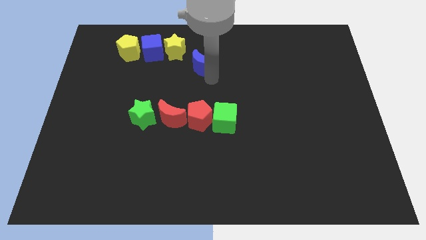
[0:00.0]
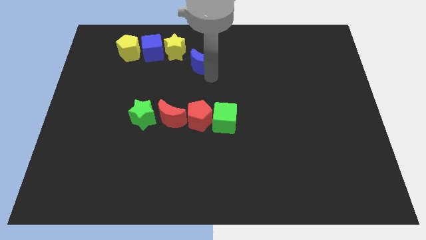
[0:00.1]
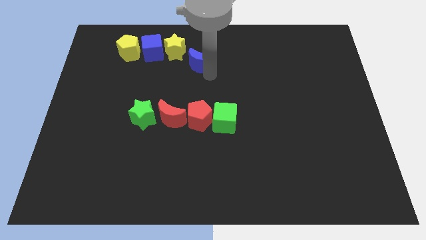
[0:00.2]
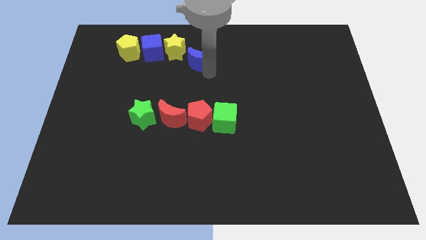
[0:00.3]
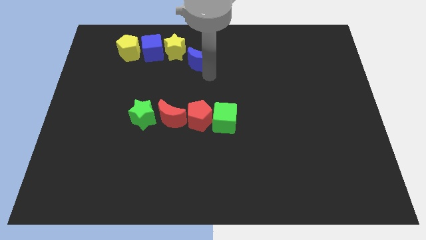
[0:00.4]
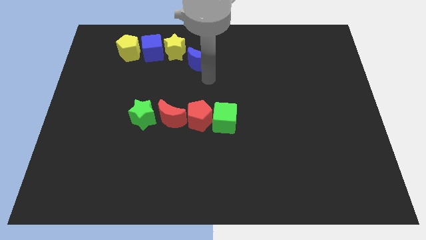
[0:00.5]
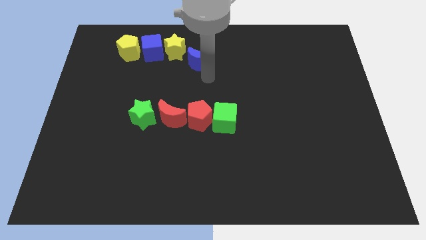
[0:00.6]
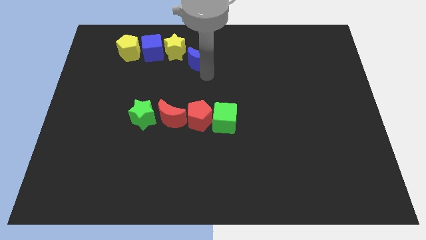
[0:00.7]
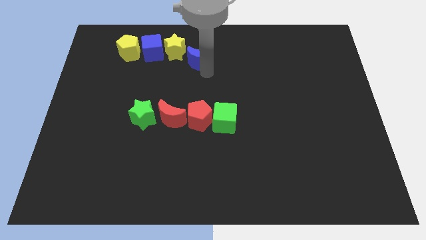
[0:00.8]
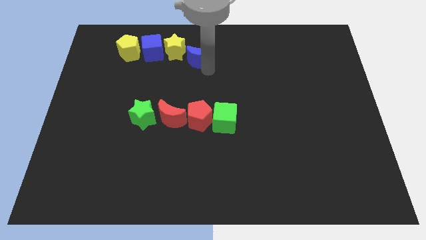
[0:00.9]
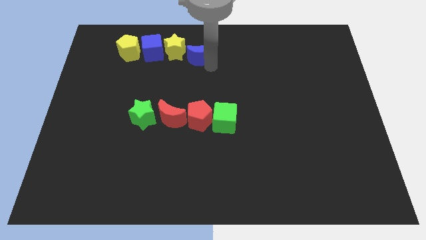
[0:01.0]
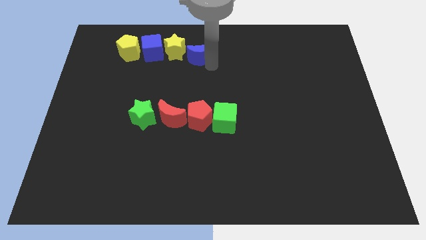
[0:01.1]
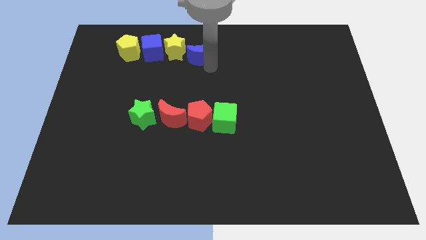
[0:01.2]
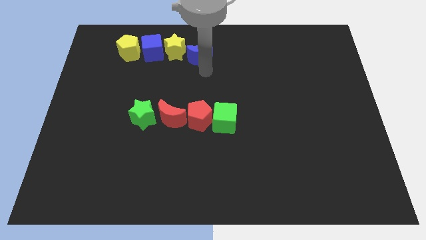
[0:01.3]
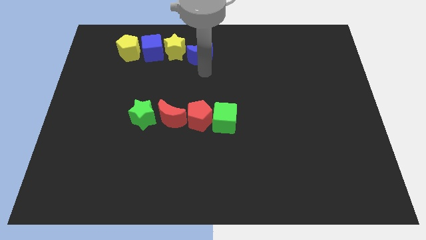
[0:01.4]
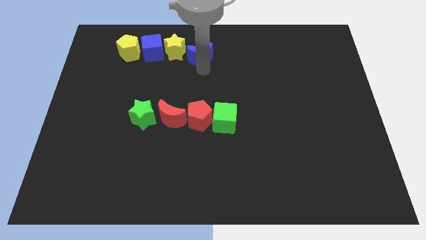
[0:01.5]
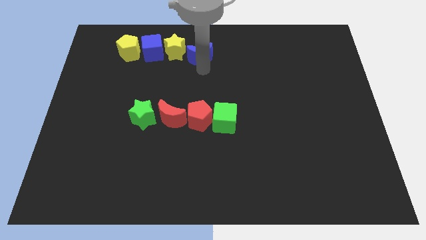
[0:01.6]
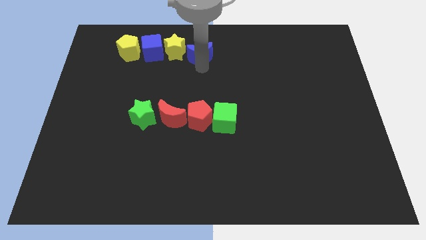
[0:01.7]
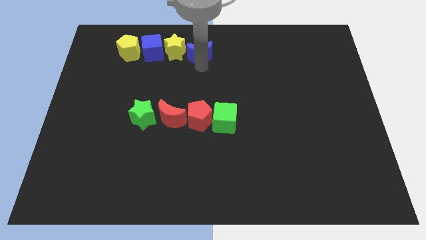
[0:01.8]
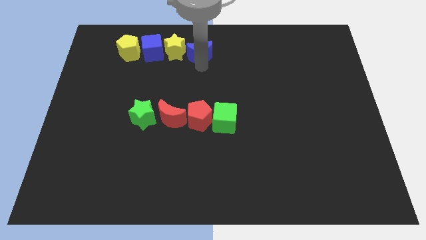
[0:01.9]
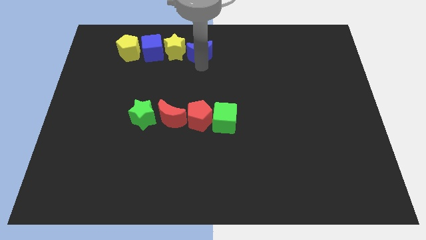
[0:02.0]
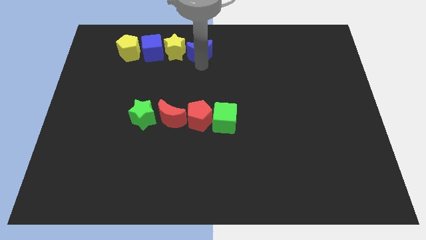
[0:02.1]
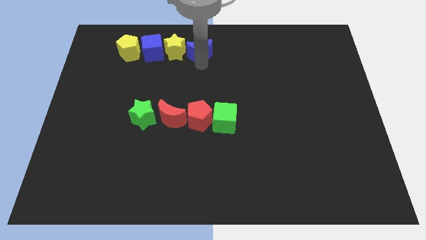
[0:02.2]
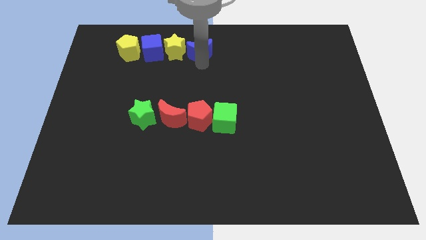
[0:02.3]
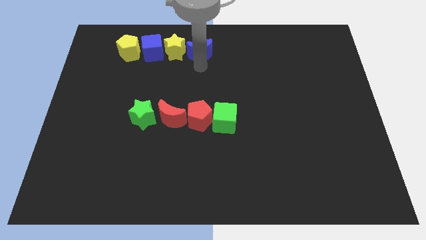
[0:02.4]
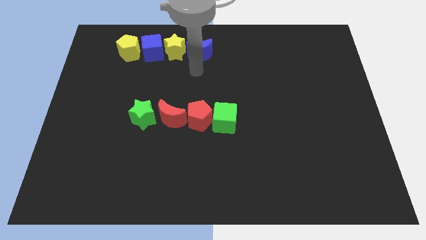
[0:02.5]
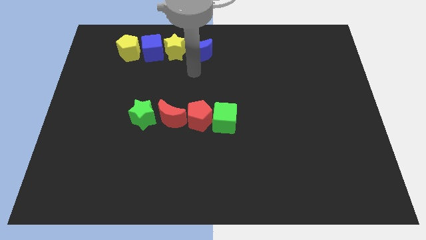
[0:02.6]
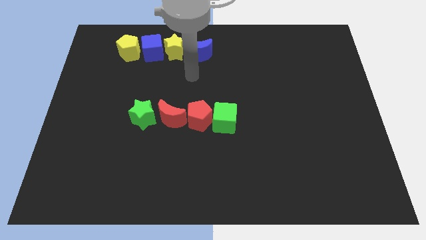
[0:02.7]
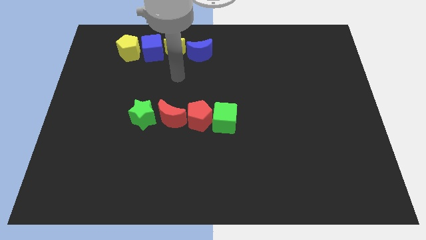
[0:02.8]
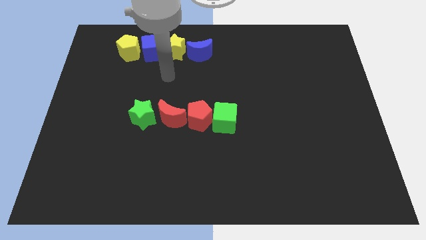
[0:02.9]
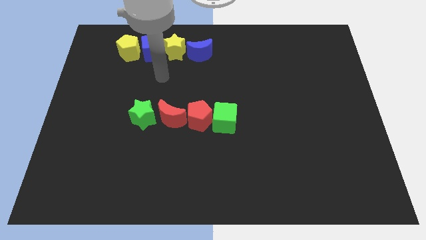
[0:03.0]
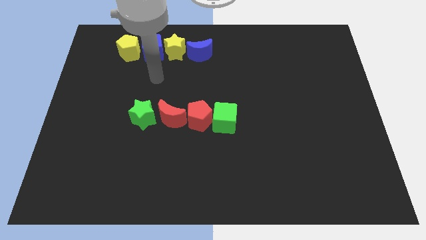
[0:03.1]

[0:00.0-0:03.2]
place blue crescent close to the yellow star

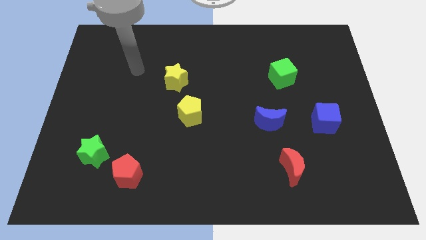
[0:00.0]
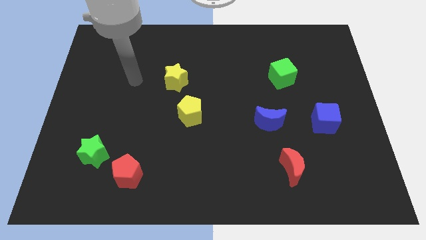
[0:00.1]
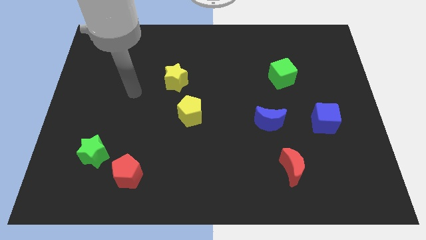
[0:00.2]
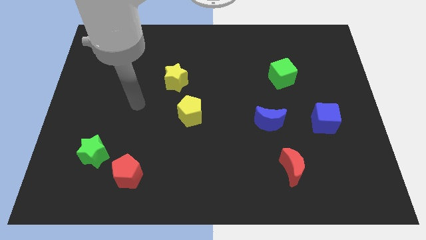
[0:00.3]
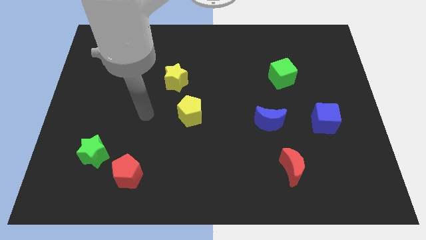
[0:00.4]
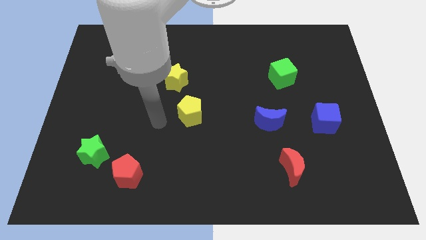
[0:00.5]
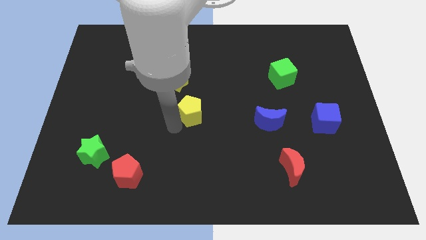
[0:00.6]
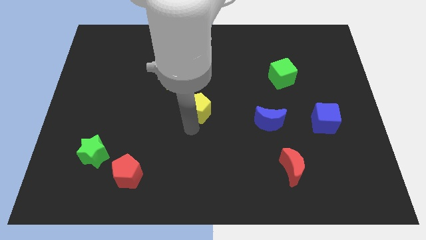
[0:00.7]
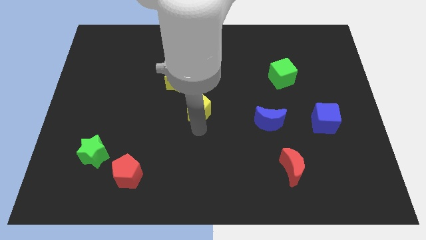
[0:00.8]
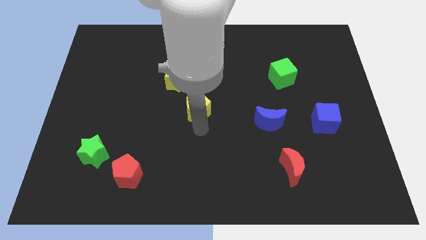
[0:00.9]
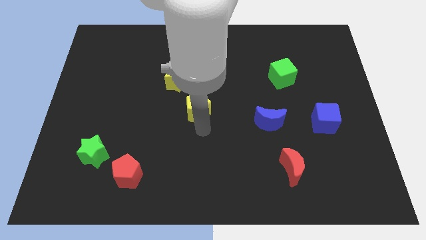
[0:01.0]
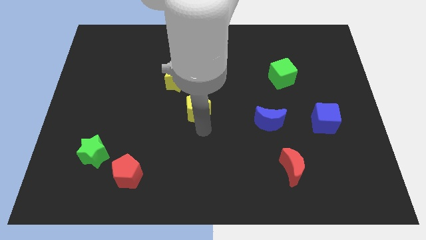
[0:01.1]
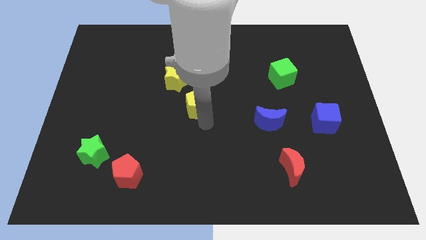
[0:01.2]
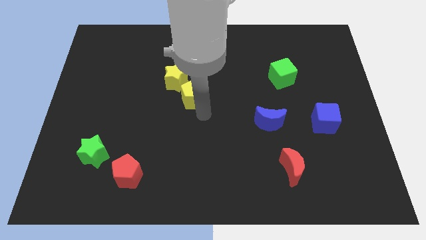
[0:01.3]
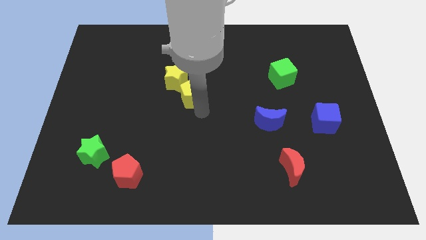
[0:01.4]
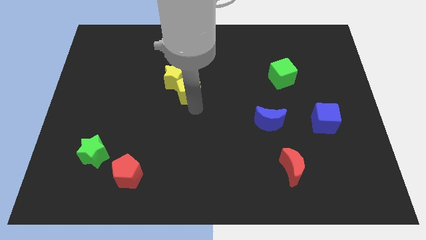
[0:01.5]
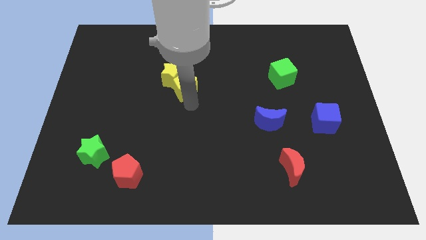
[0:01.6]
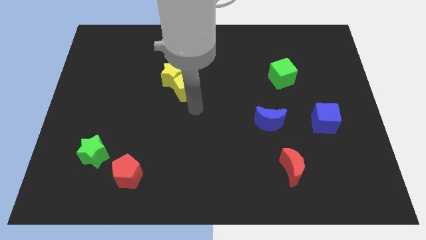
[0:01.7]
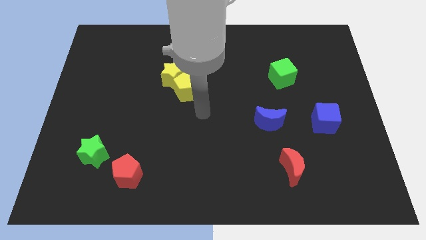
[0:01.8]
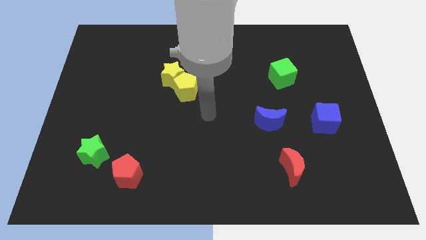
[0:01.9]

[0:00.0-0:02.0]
push the yellow pentagon into the yellow star

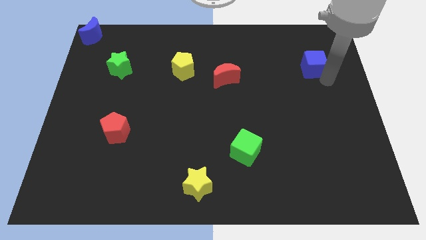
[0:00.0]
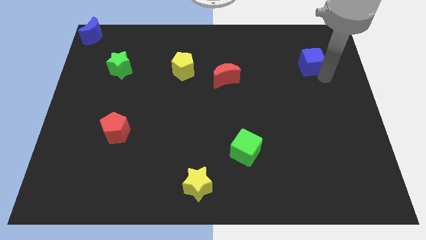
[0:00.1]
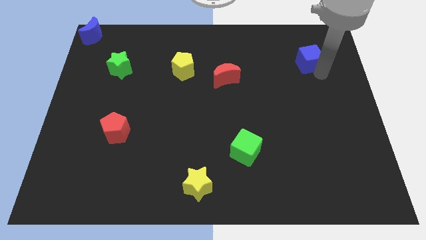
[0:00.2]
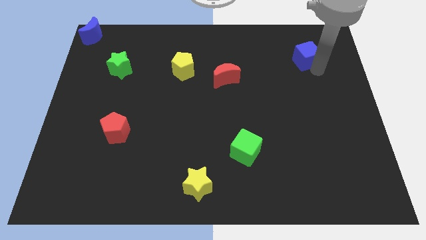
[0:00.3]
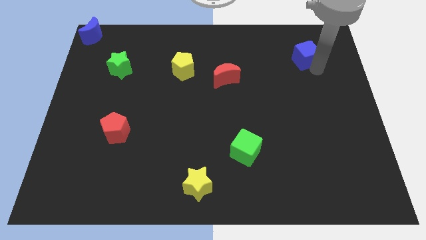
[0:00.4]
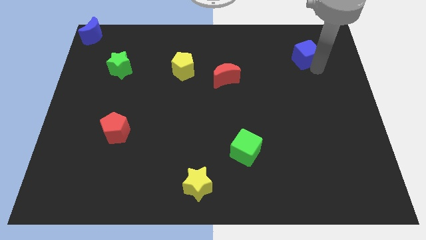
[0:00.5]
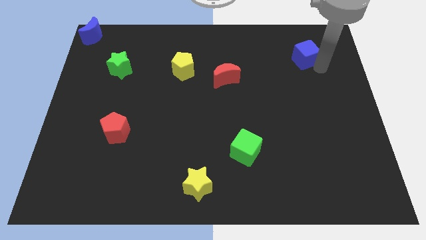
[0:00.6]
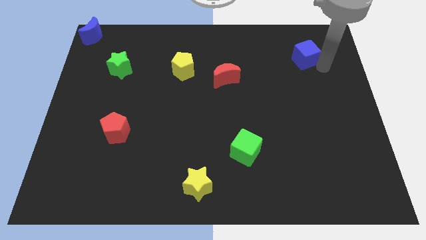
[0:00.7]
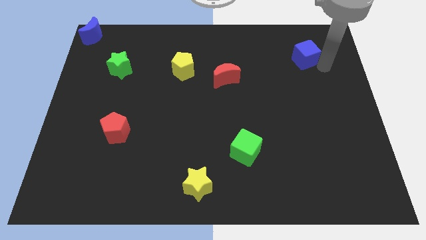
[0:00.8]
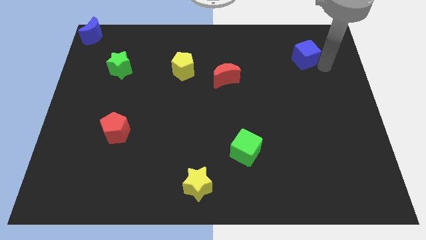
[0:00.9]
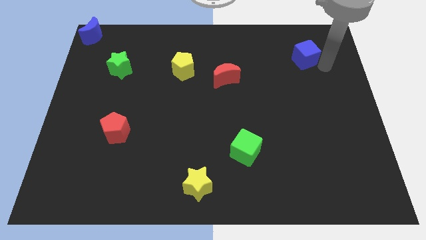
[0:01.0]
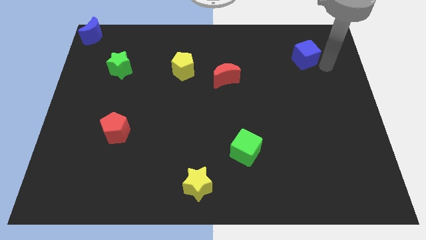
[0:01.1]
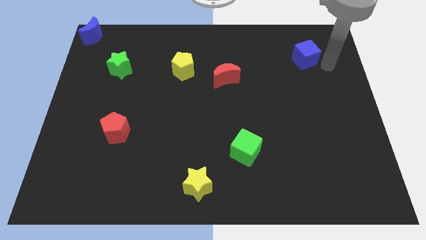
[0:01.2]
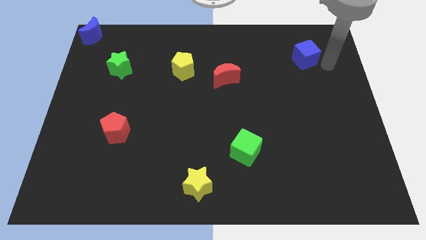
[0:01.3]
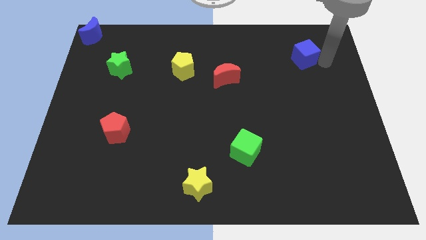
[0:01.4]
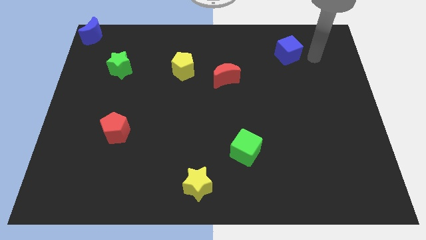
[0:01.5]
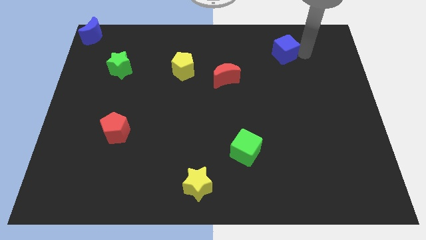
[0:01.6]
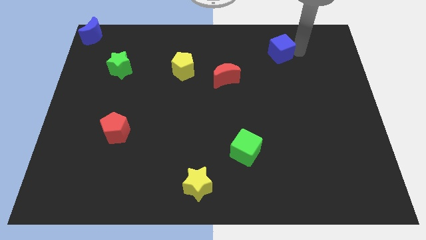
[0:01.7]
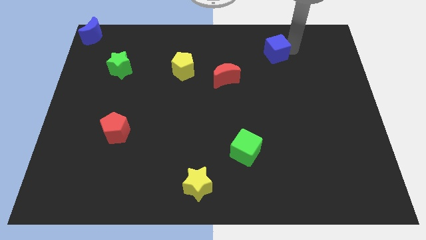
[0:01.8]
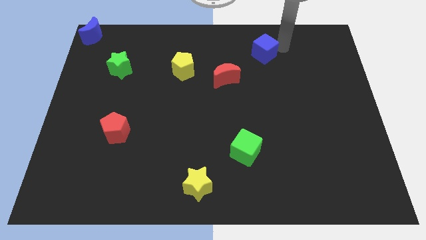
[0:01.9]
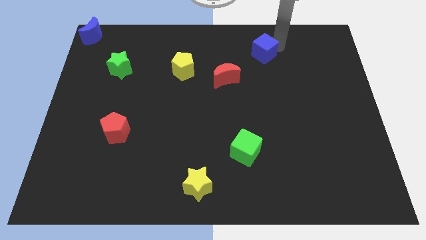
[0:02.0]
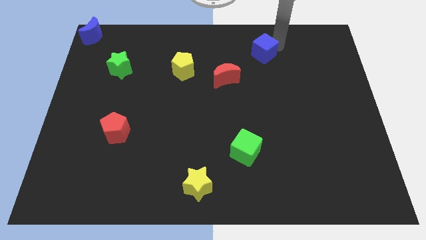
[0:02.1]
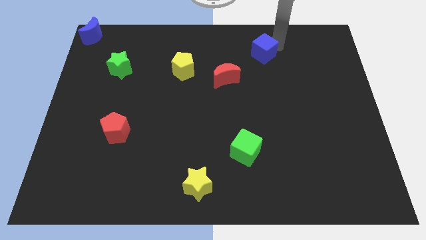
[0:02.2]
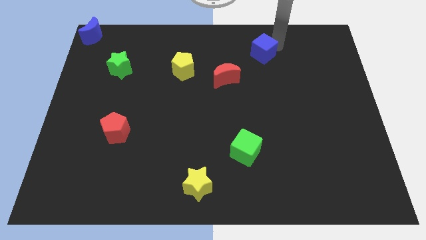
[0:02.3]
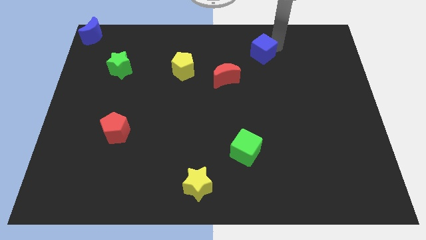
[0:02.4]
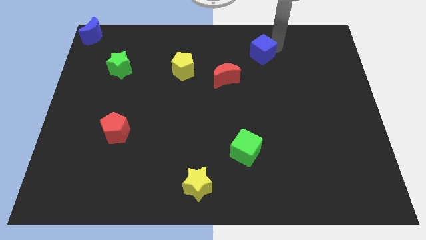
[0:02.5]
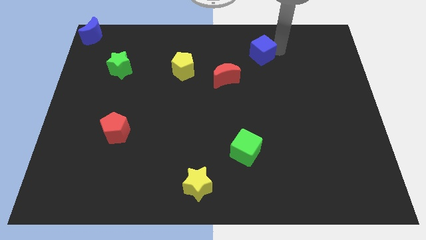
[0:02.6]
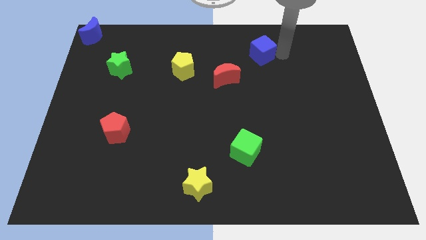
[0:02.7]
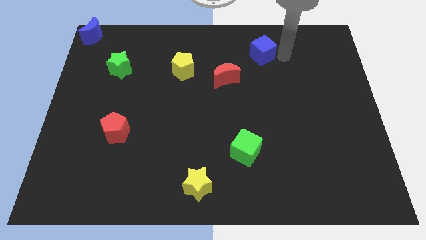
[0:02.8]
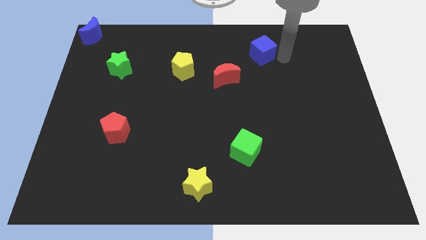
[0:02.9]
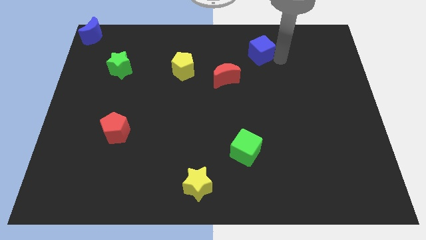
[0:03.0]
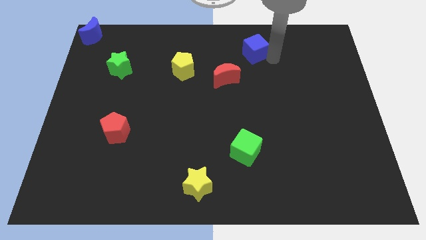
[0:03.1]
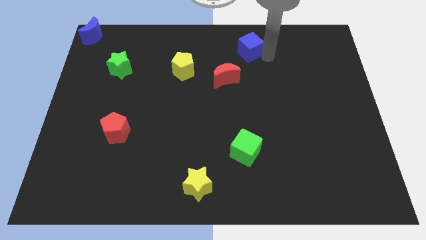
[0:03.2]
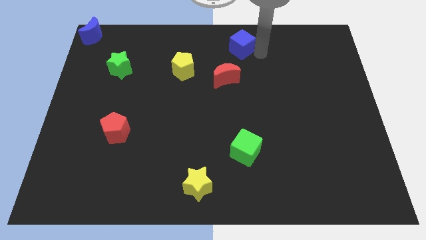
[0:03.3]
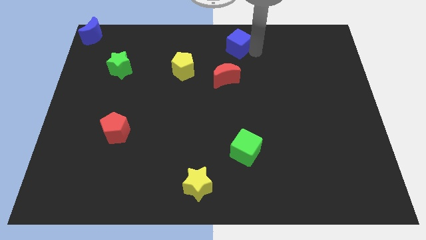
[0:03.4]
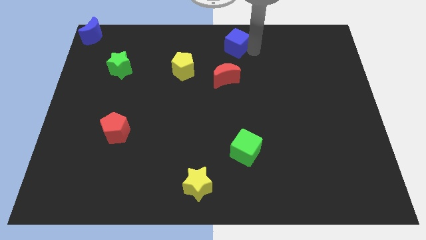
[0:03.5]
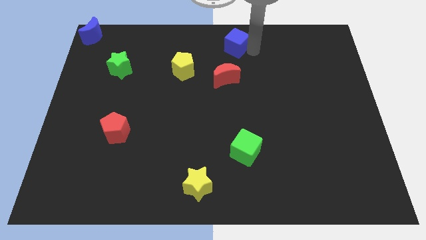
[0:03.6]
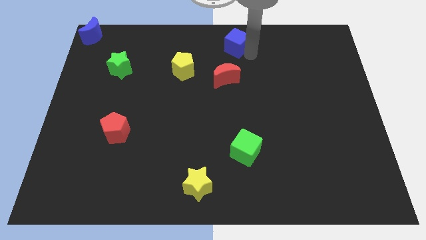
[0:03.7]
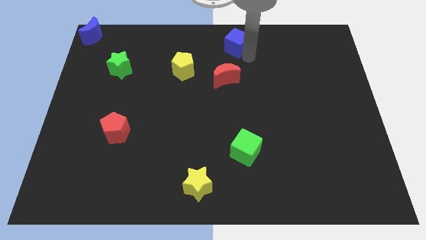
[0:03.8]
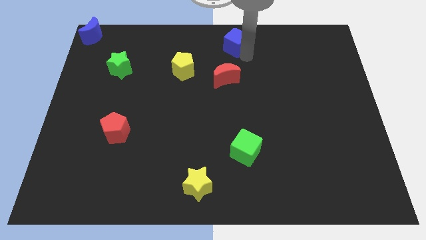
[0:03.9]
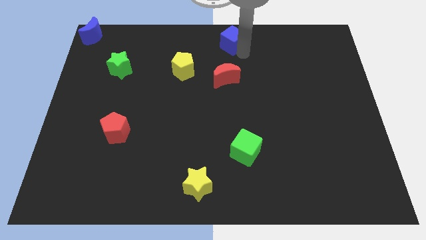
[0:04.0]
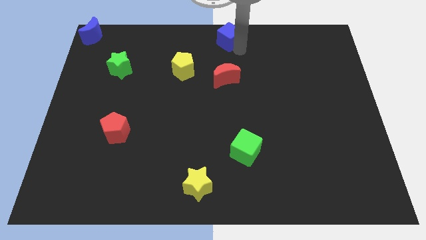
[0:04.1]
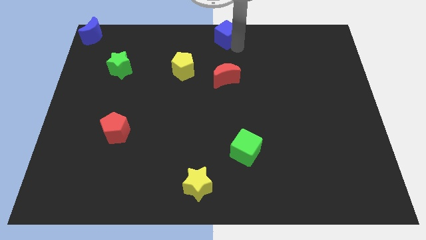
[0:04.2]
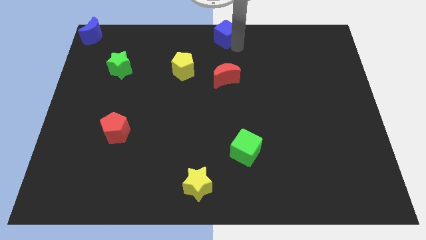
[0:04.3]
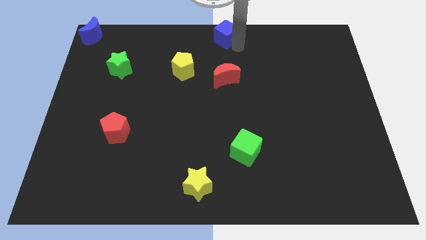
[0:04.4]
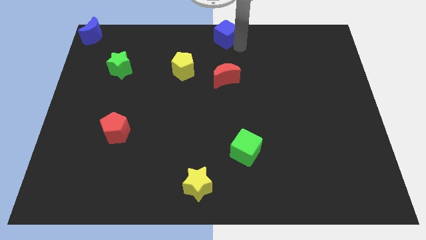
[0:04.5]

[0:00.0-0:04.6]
push the blue cube at the top center of the board
